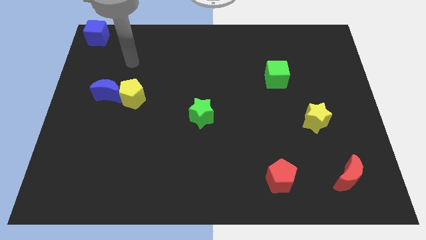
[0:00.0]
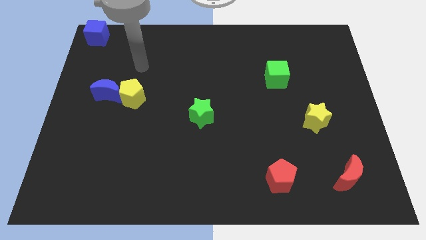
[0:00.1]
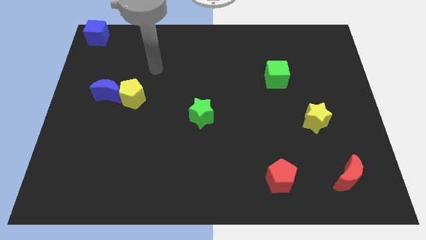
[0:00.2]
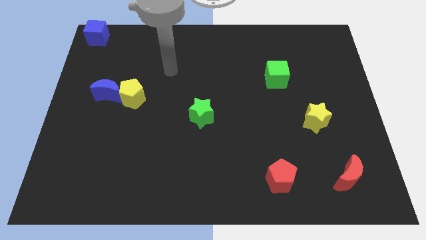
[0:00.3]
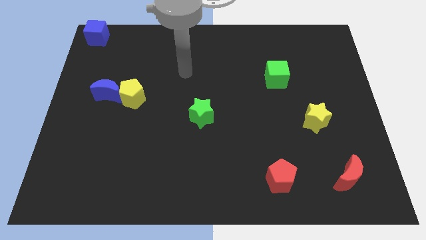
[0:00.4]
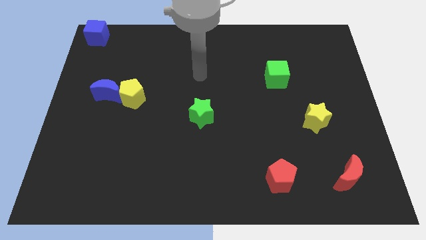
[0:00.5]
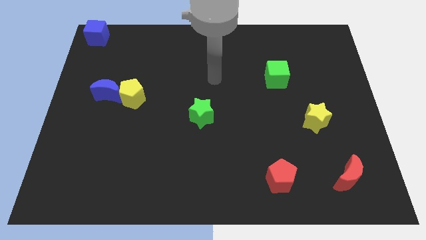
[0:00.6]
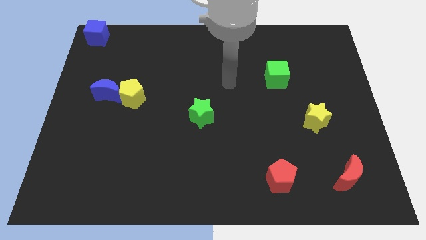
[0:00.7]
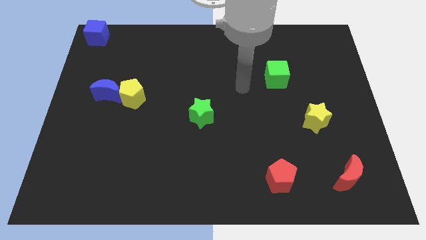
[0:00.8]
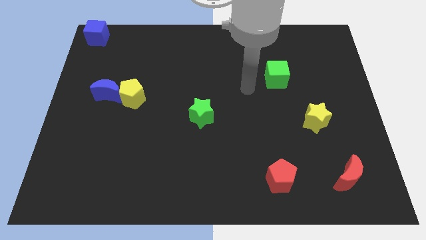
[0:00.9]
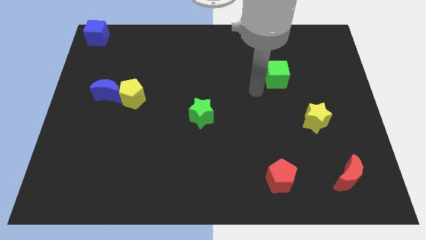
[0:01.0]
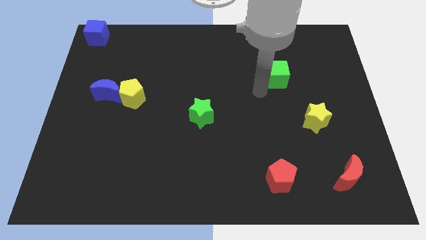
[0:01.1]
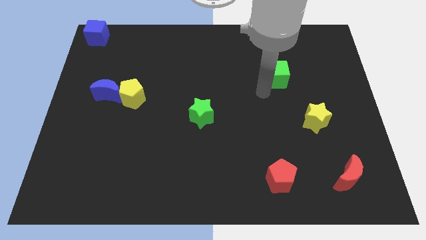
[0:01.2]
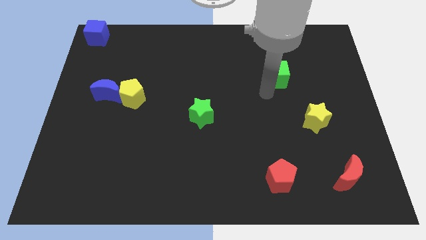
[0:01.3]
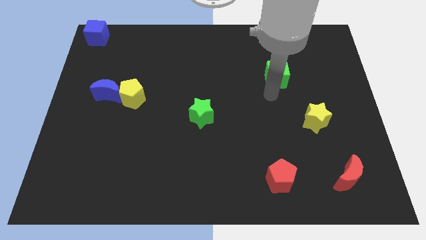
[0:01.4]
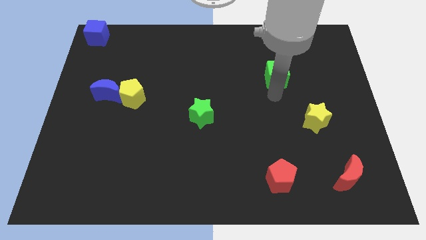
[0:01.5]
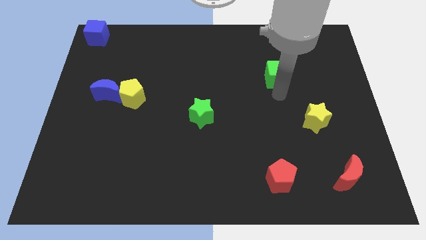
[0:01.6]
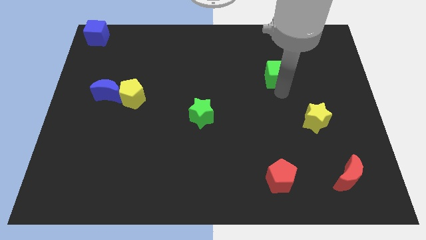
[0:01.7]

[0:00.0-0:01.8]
place your arm to the bottom side of the green cube

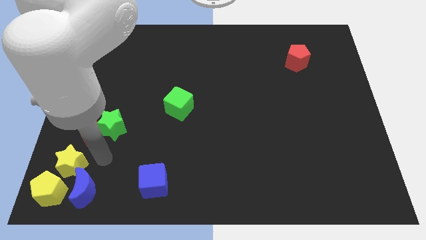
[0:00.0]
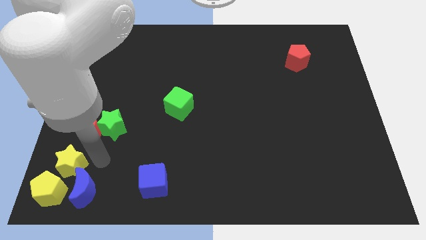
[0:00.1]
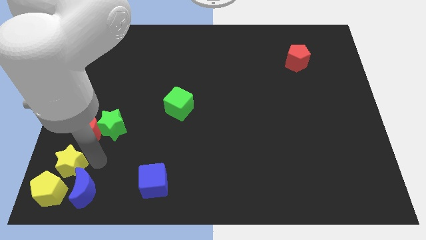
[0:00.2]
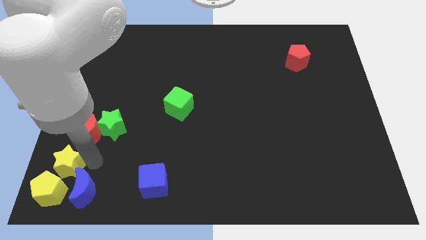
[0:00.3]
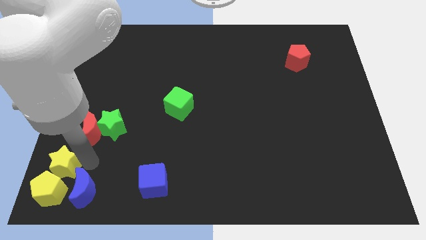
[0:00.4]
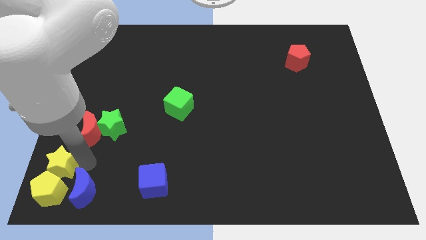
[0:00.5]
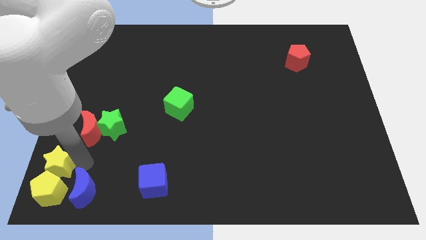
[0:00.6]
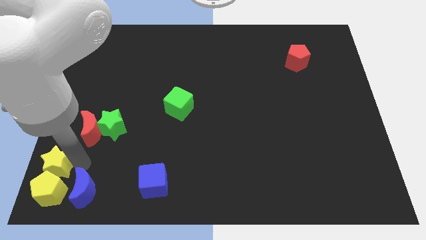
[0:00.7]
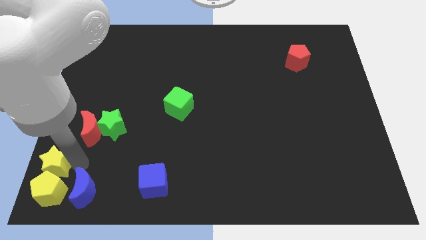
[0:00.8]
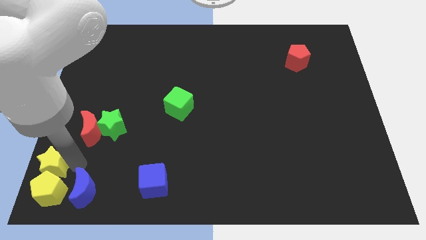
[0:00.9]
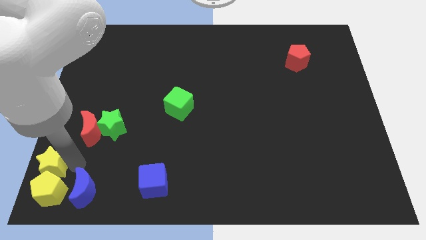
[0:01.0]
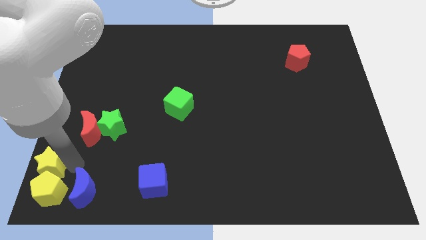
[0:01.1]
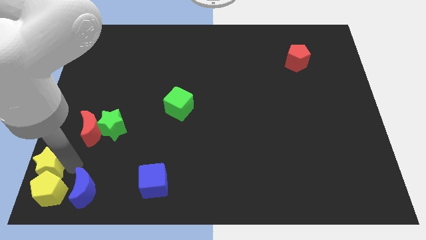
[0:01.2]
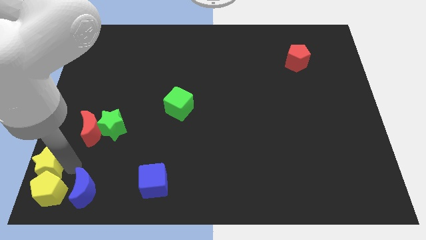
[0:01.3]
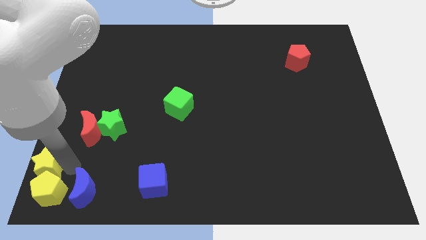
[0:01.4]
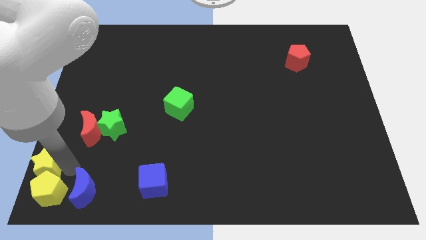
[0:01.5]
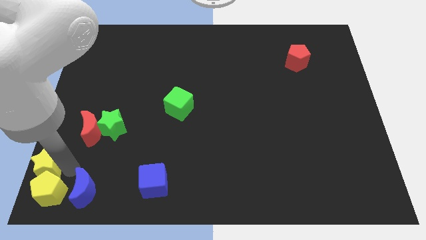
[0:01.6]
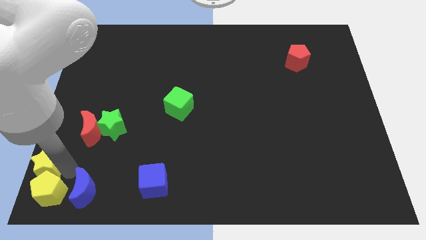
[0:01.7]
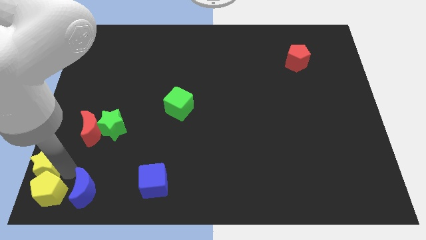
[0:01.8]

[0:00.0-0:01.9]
move the yellow star above the yellow pentagon

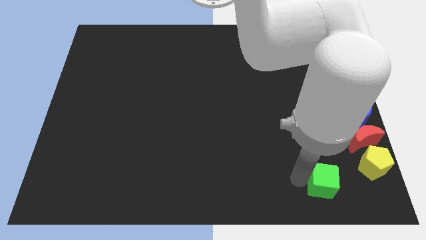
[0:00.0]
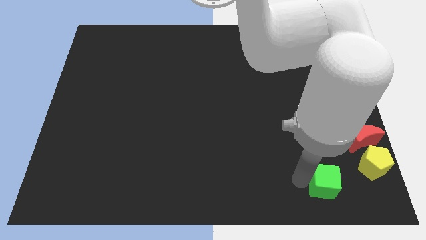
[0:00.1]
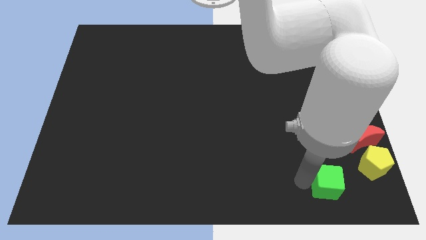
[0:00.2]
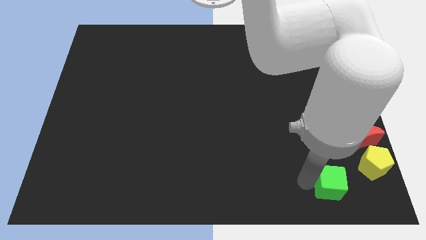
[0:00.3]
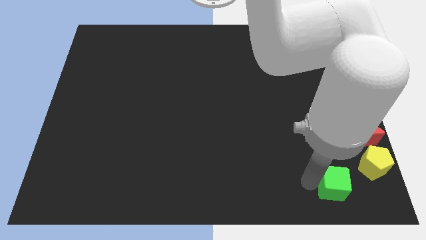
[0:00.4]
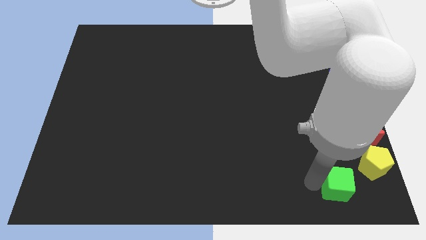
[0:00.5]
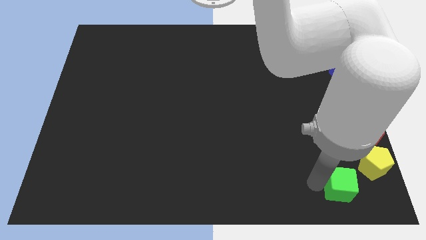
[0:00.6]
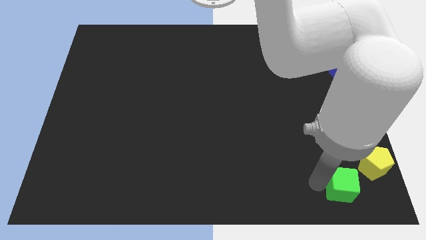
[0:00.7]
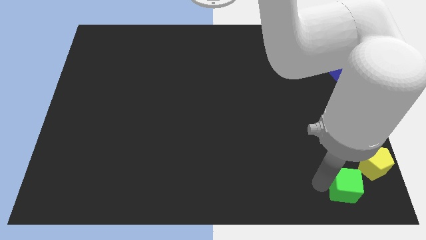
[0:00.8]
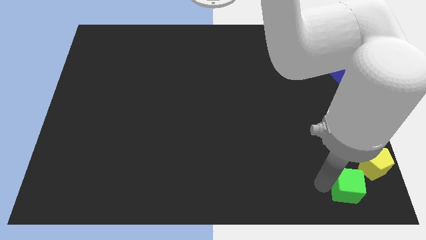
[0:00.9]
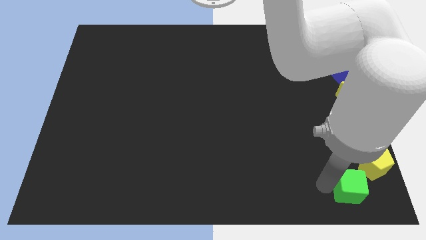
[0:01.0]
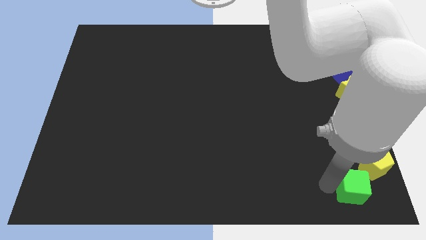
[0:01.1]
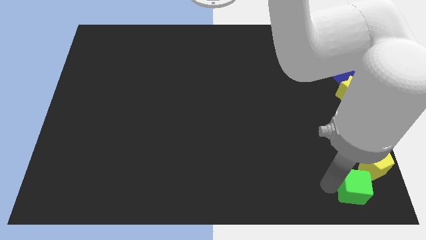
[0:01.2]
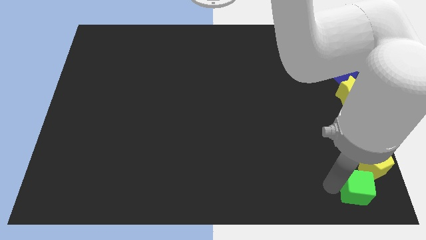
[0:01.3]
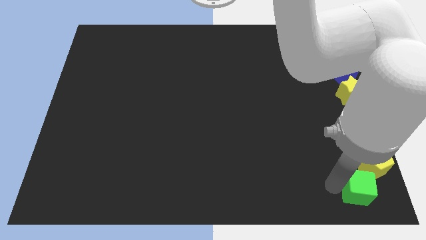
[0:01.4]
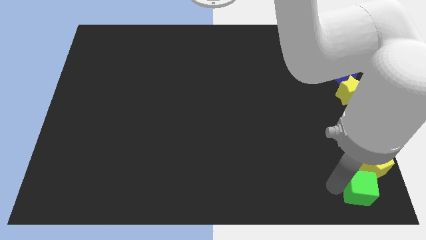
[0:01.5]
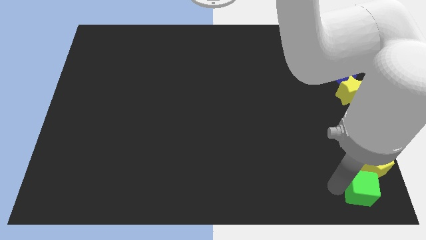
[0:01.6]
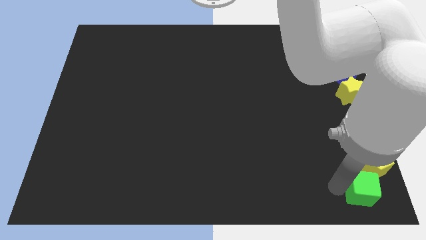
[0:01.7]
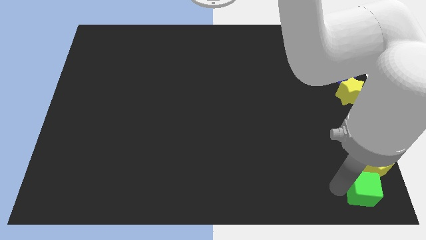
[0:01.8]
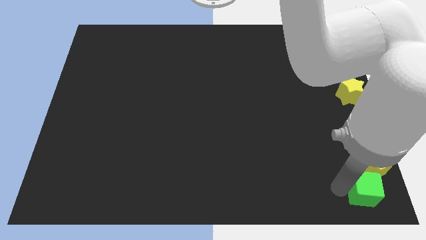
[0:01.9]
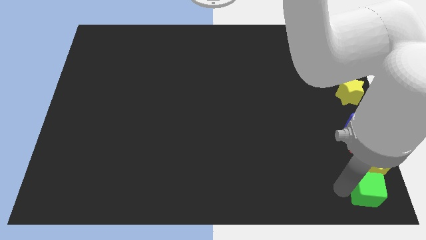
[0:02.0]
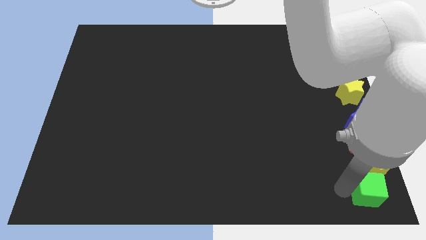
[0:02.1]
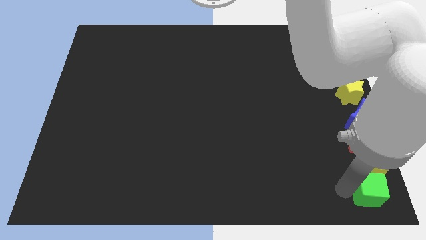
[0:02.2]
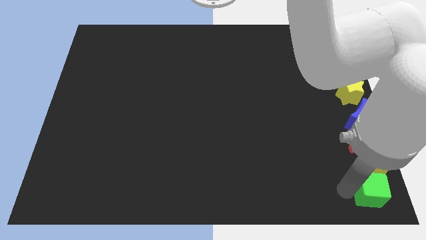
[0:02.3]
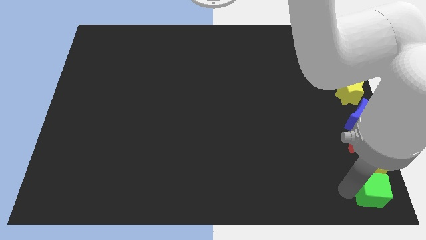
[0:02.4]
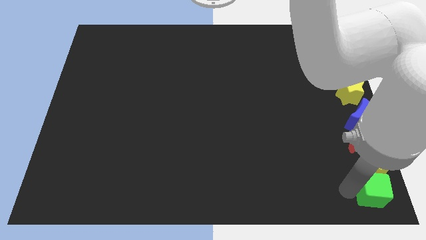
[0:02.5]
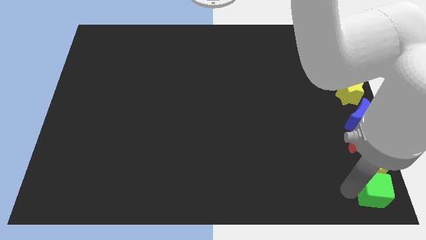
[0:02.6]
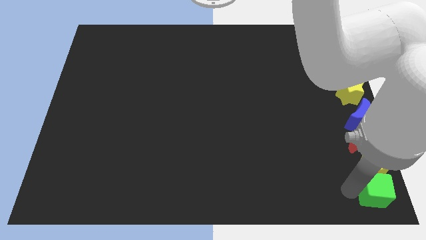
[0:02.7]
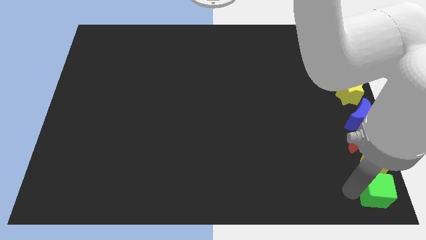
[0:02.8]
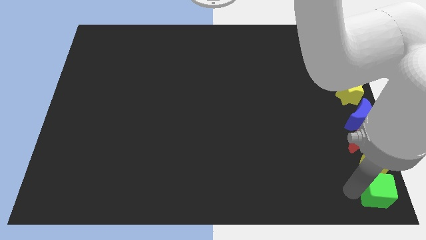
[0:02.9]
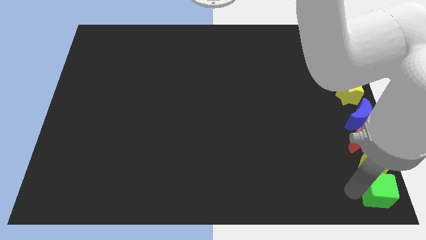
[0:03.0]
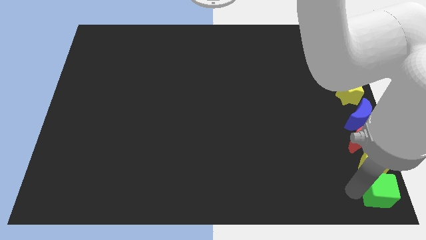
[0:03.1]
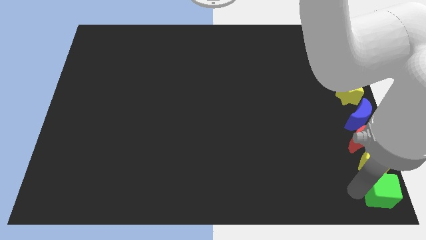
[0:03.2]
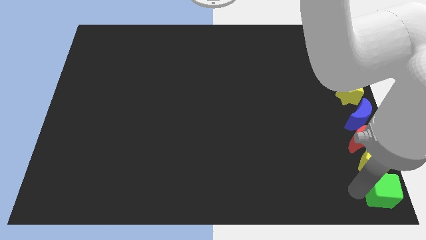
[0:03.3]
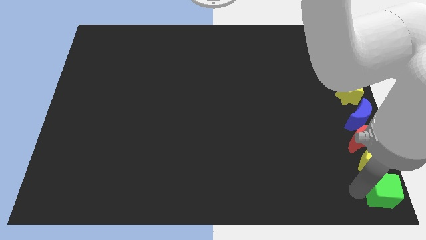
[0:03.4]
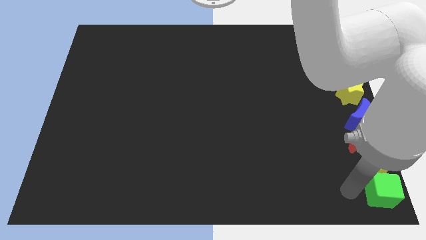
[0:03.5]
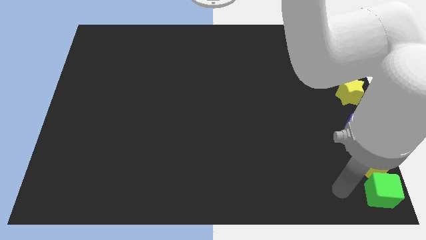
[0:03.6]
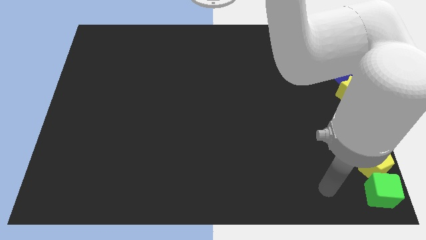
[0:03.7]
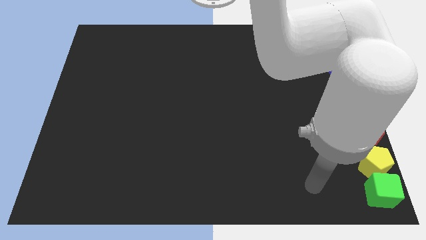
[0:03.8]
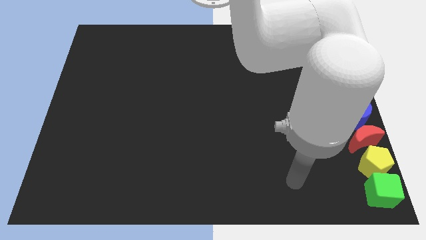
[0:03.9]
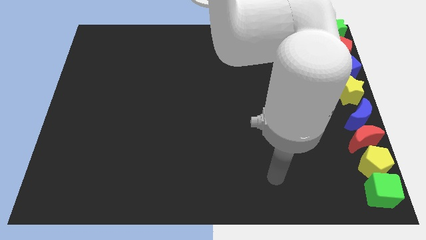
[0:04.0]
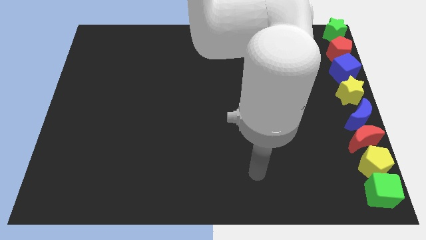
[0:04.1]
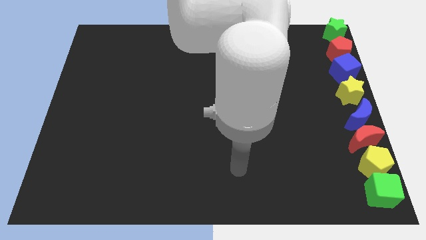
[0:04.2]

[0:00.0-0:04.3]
place the green cube below the yellow pentagon

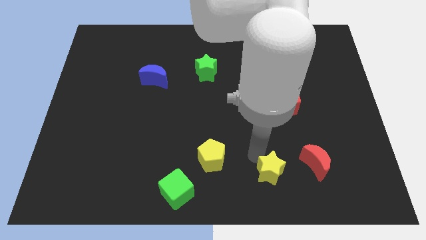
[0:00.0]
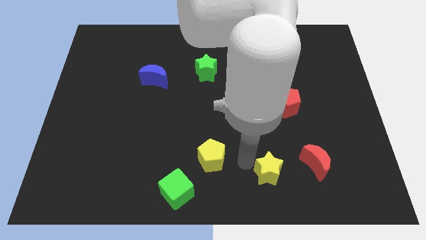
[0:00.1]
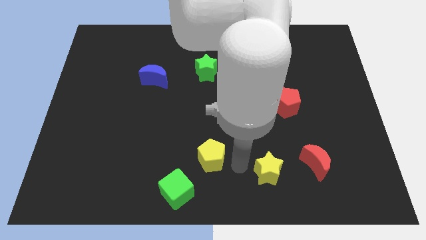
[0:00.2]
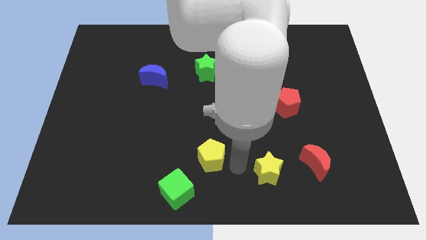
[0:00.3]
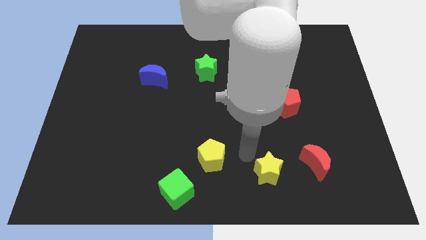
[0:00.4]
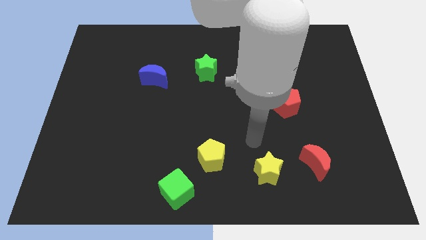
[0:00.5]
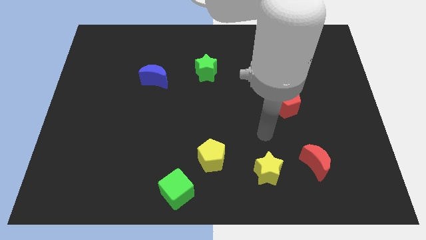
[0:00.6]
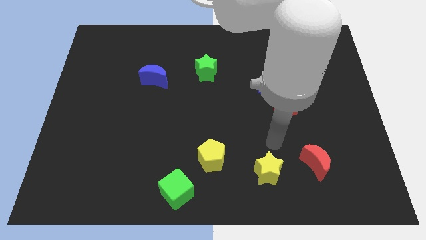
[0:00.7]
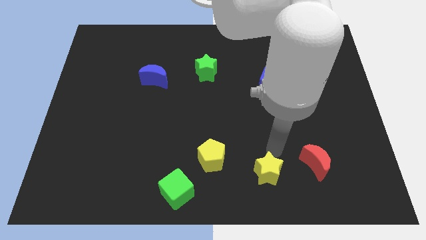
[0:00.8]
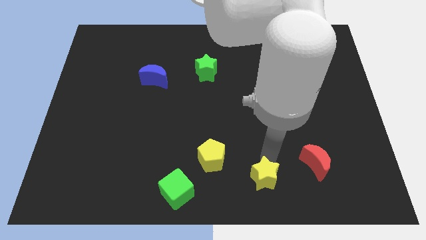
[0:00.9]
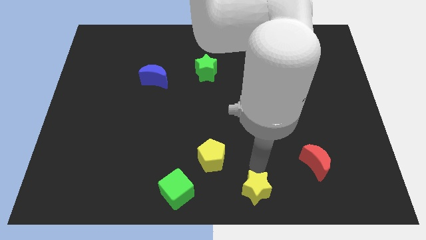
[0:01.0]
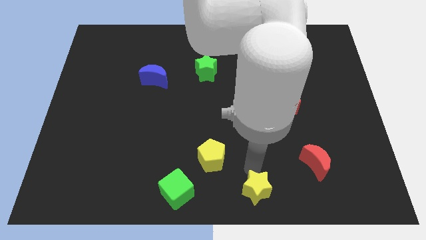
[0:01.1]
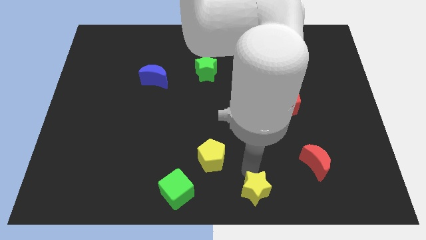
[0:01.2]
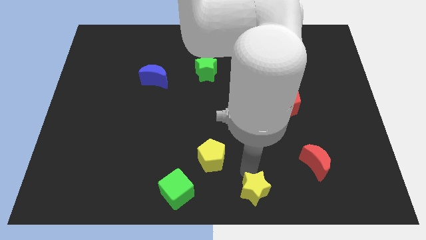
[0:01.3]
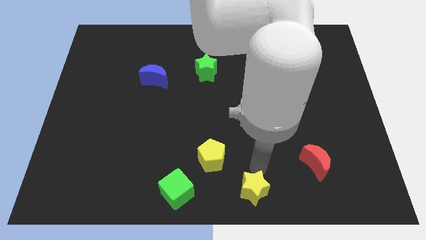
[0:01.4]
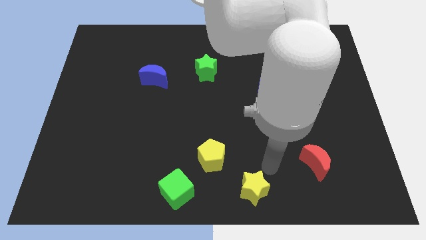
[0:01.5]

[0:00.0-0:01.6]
move the yellow star to the bottom center
